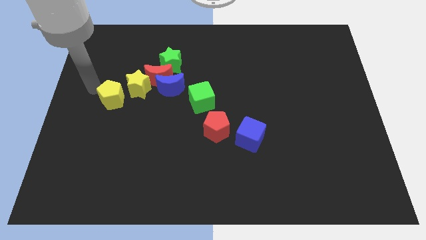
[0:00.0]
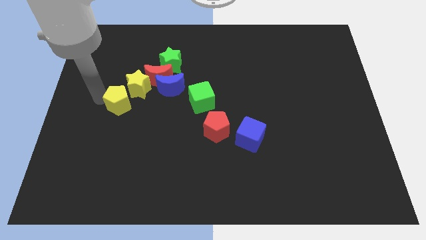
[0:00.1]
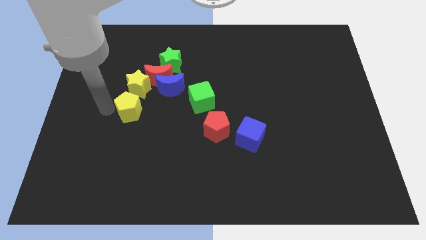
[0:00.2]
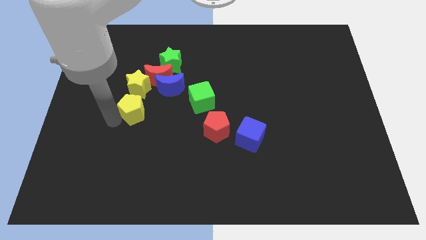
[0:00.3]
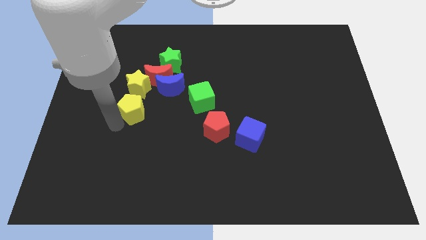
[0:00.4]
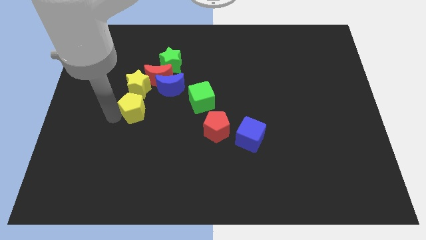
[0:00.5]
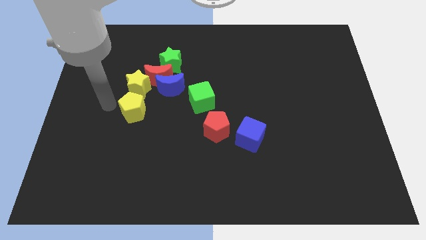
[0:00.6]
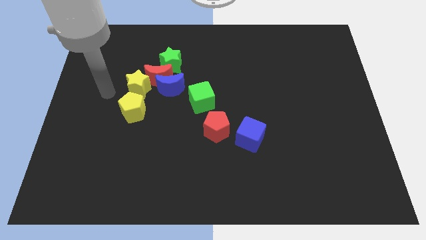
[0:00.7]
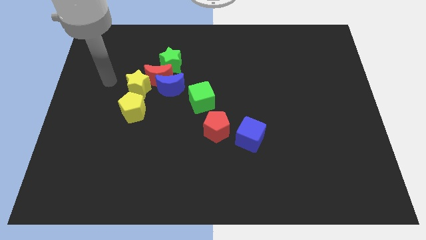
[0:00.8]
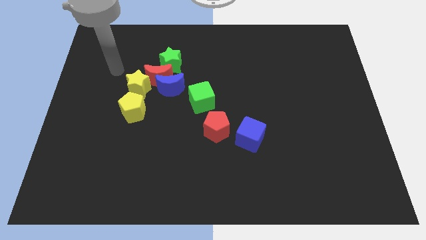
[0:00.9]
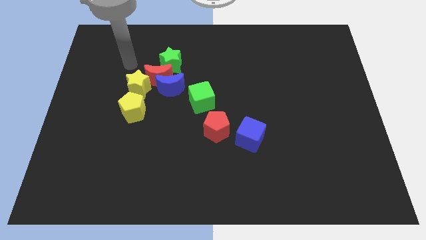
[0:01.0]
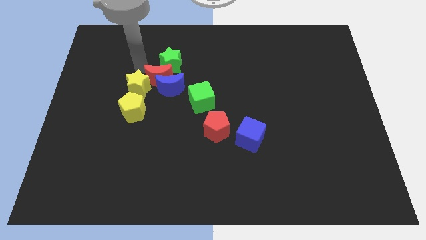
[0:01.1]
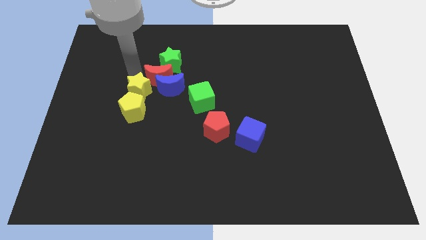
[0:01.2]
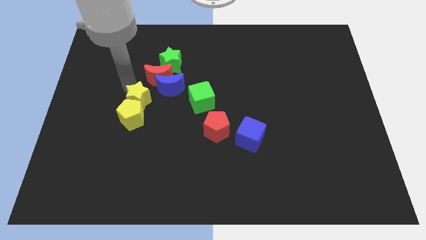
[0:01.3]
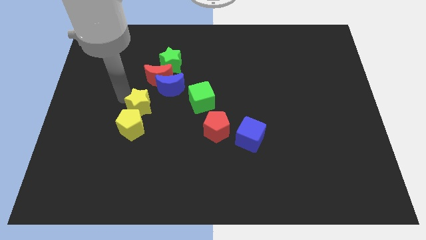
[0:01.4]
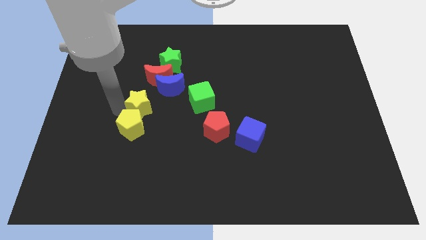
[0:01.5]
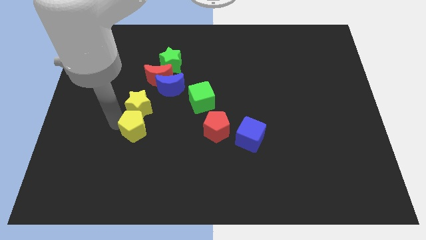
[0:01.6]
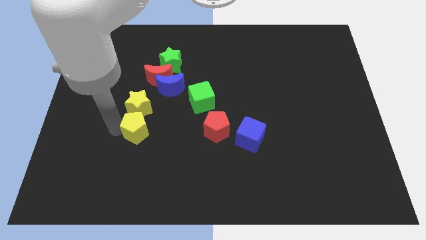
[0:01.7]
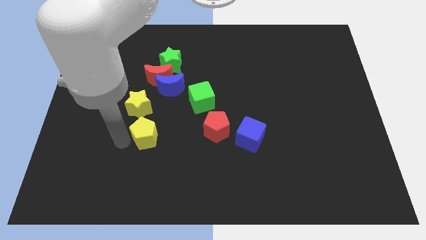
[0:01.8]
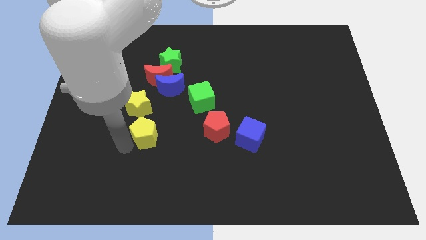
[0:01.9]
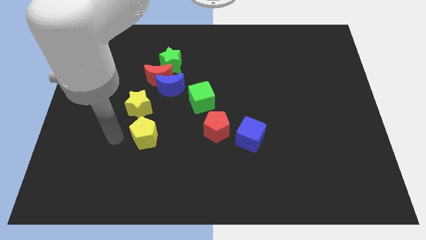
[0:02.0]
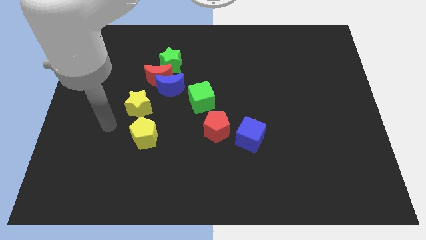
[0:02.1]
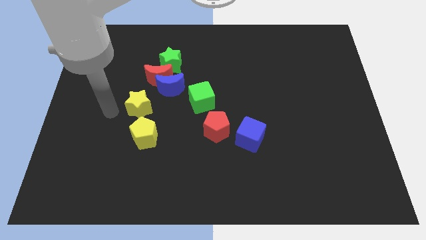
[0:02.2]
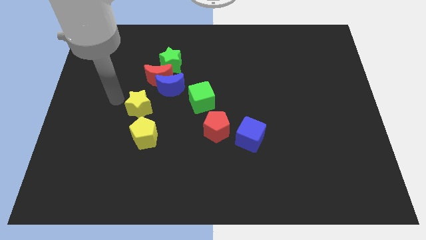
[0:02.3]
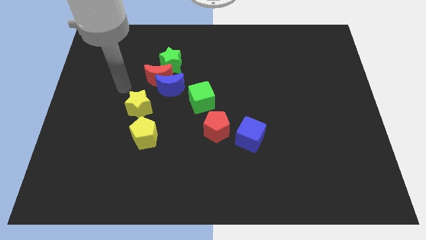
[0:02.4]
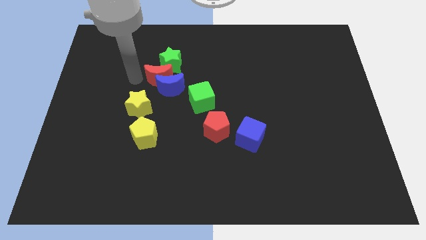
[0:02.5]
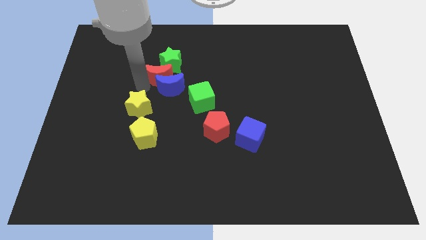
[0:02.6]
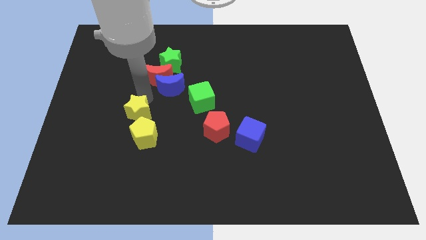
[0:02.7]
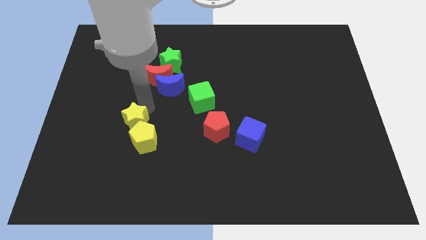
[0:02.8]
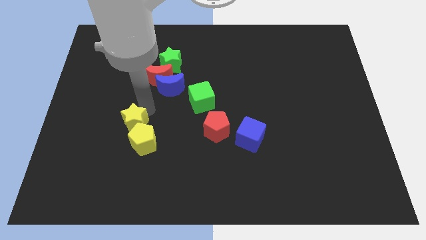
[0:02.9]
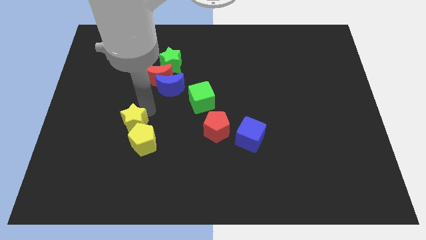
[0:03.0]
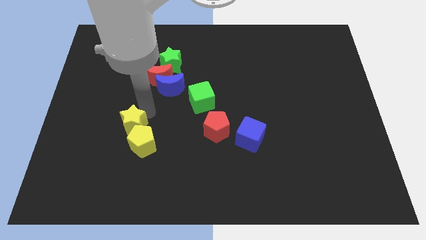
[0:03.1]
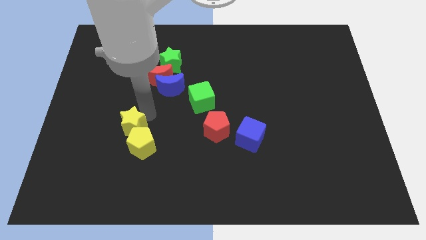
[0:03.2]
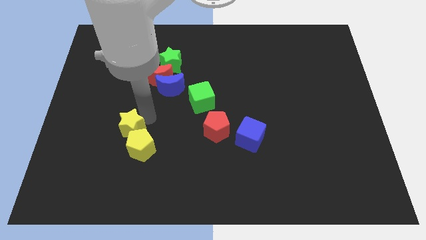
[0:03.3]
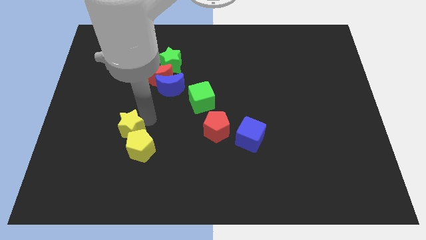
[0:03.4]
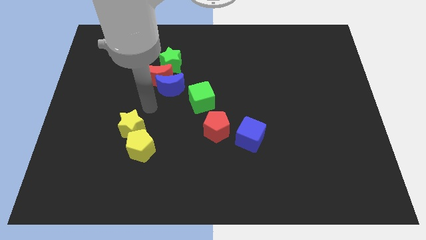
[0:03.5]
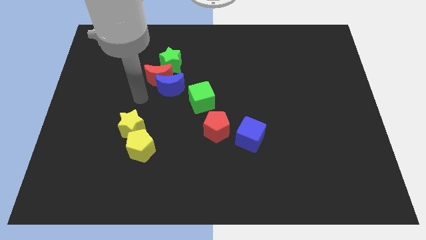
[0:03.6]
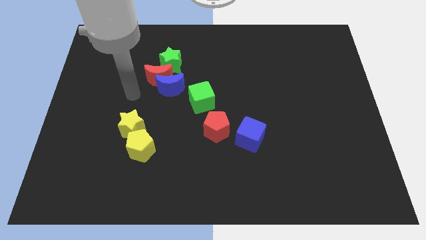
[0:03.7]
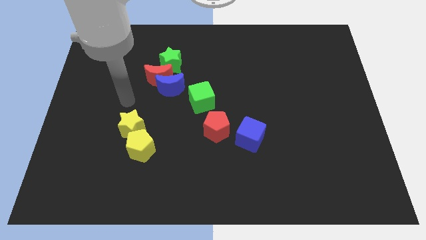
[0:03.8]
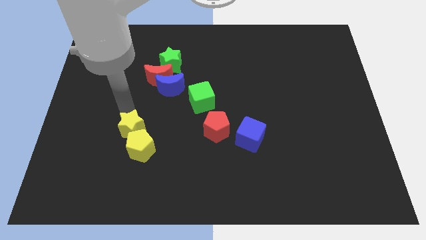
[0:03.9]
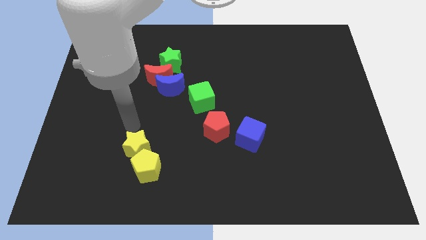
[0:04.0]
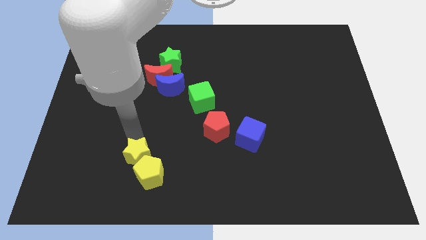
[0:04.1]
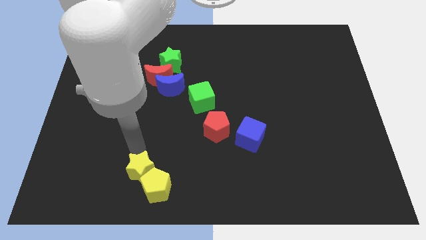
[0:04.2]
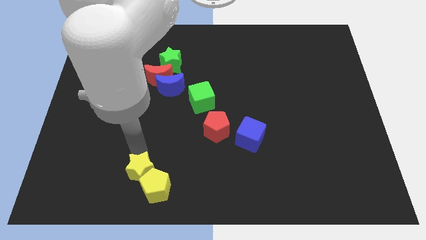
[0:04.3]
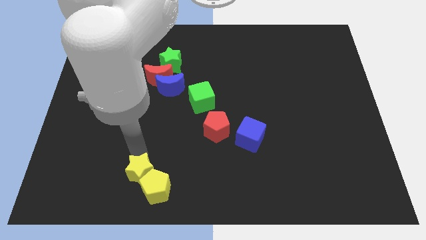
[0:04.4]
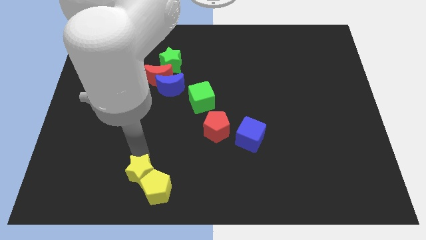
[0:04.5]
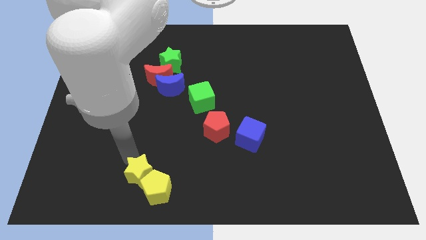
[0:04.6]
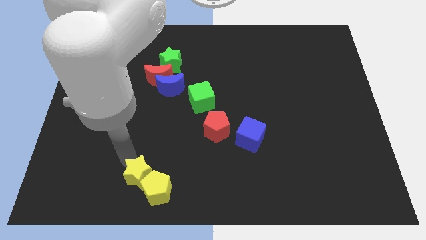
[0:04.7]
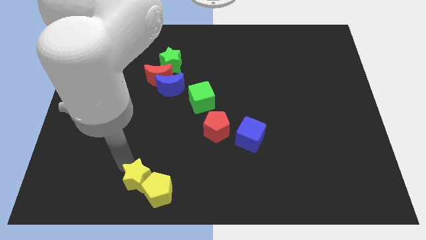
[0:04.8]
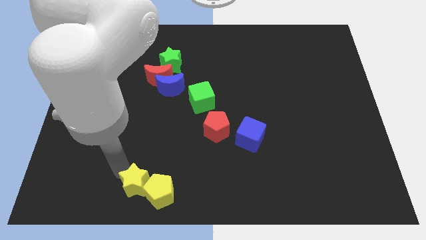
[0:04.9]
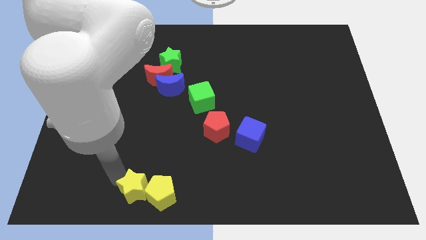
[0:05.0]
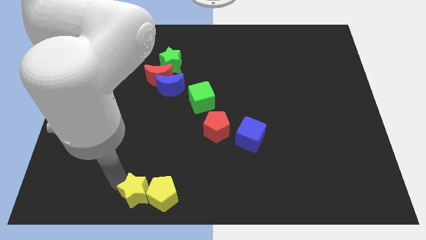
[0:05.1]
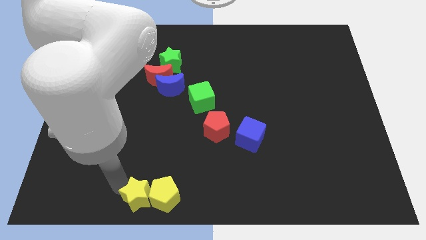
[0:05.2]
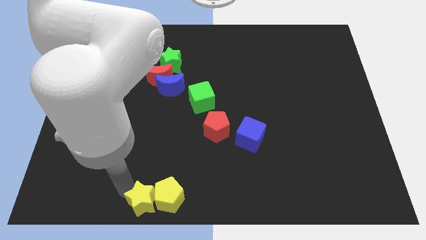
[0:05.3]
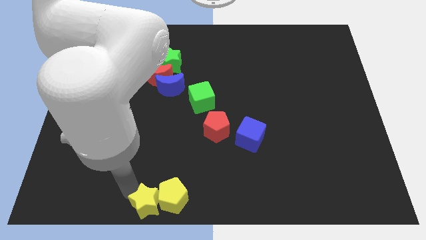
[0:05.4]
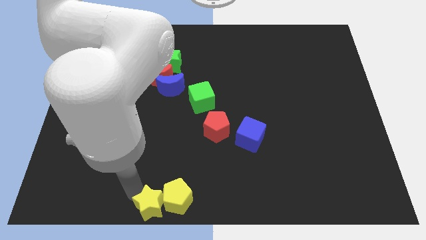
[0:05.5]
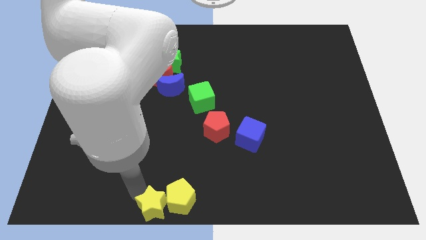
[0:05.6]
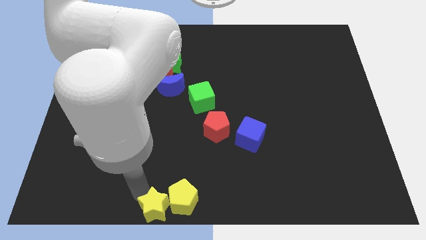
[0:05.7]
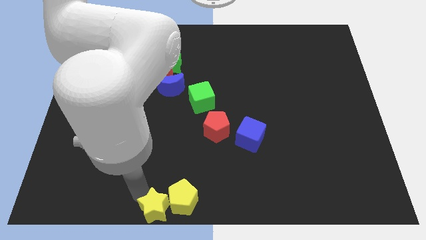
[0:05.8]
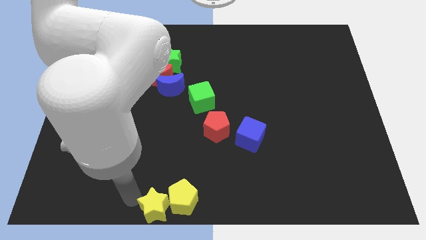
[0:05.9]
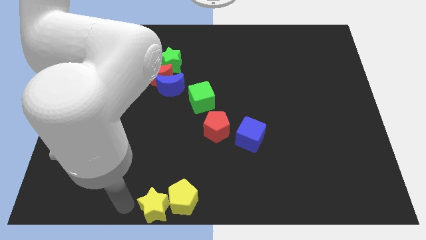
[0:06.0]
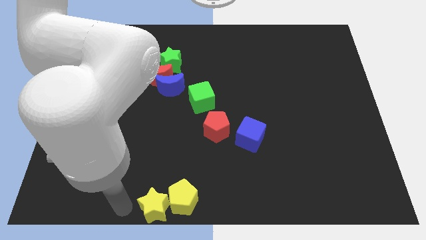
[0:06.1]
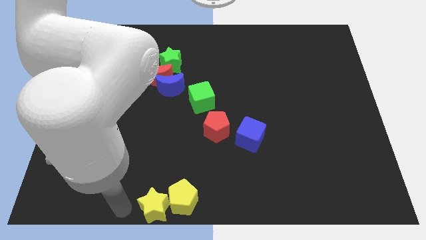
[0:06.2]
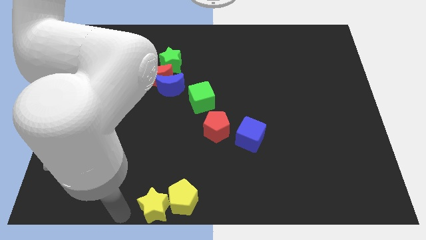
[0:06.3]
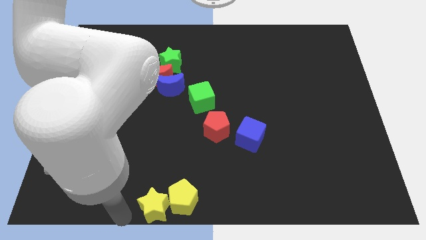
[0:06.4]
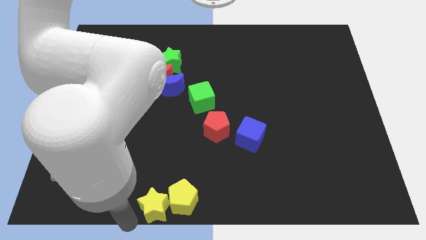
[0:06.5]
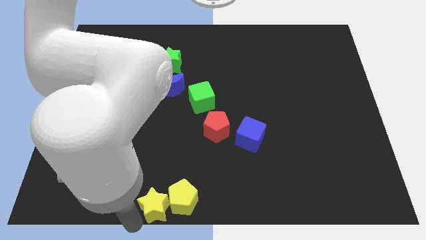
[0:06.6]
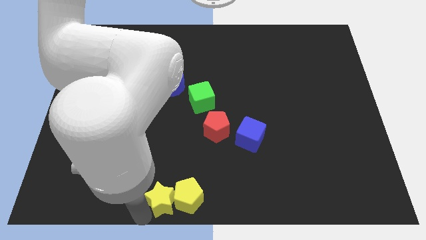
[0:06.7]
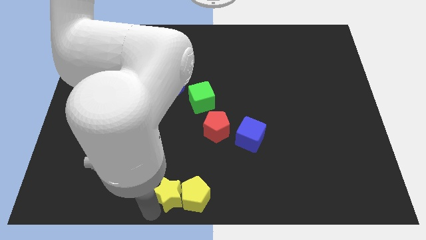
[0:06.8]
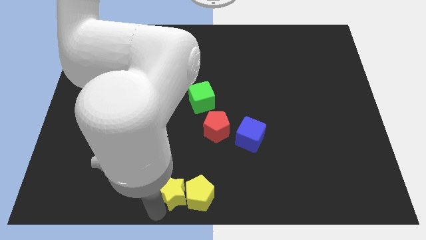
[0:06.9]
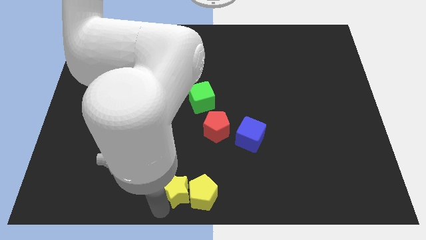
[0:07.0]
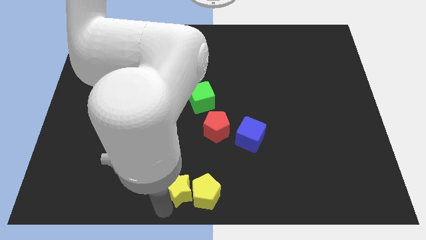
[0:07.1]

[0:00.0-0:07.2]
push the yellow blocks slightly down

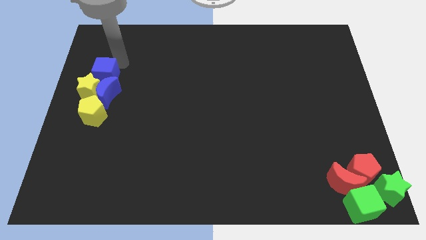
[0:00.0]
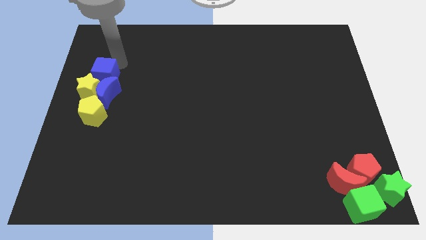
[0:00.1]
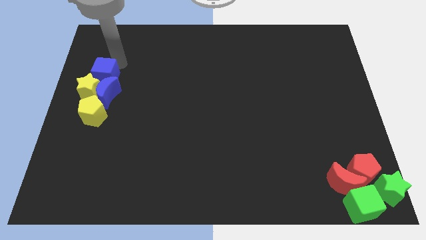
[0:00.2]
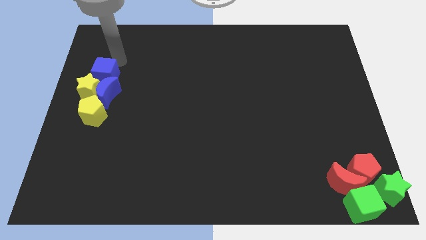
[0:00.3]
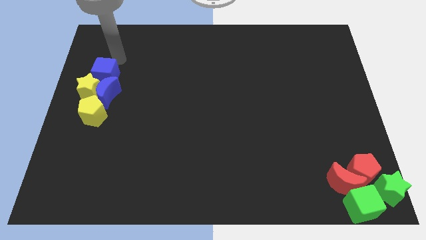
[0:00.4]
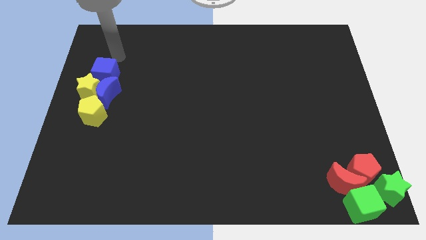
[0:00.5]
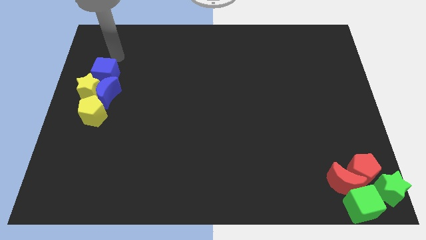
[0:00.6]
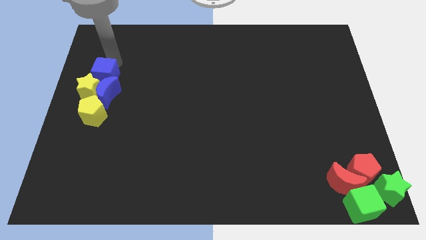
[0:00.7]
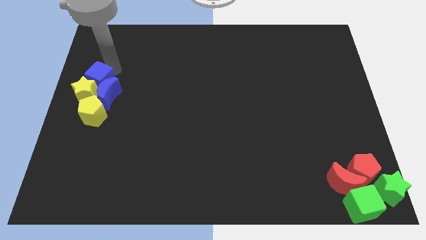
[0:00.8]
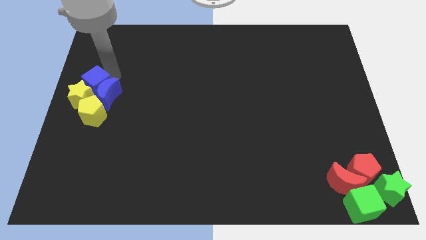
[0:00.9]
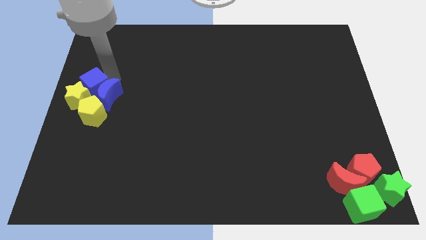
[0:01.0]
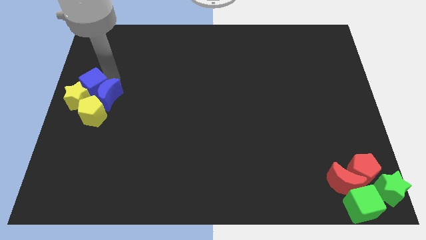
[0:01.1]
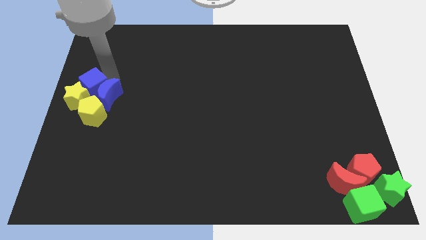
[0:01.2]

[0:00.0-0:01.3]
push the blue cube into the group of blocks at the left center of the board

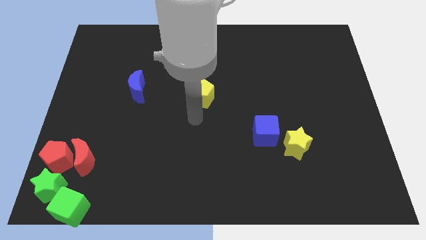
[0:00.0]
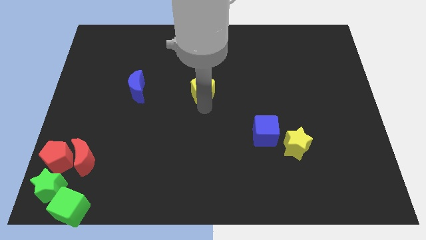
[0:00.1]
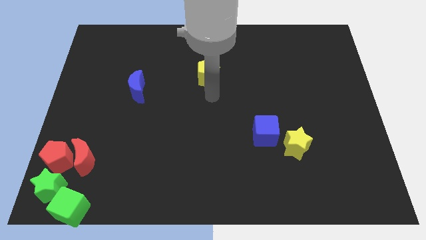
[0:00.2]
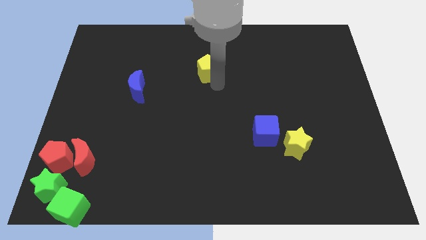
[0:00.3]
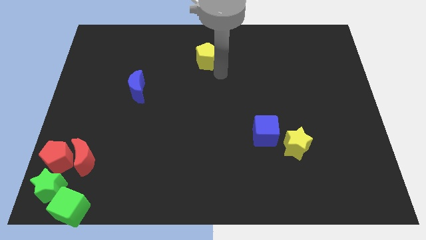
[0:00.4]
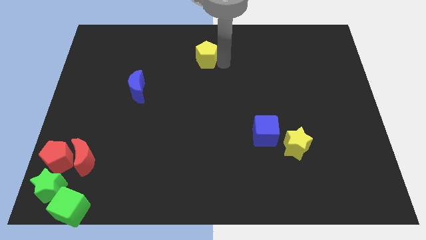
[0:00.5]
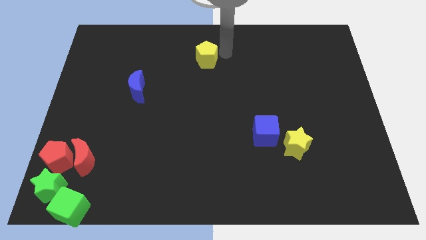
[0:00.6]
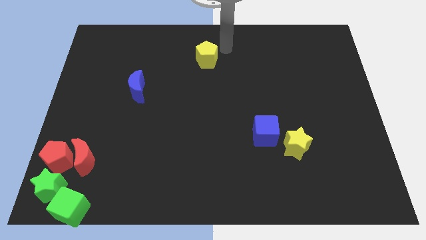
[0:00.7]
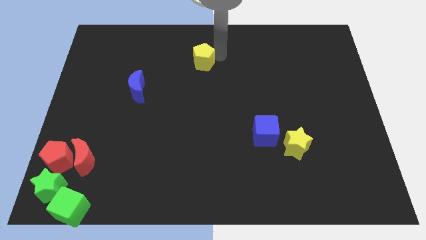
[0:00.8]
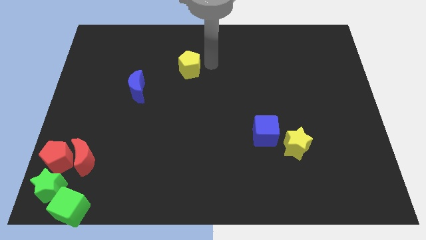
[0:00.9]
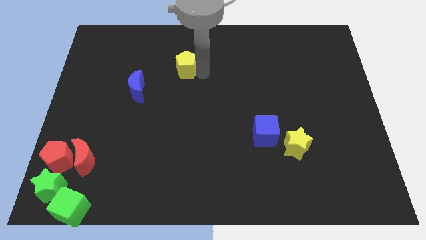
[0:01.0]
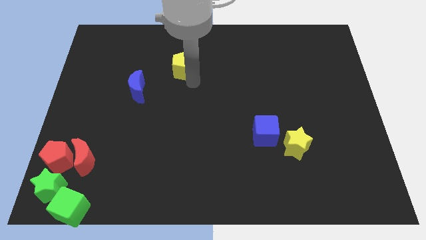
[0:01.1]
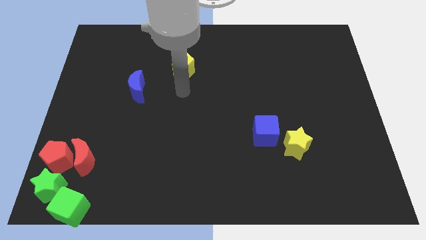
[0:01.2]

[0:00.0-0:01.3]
place the yellow pentagon diagonally top right to the blue moon
